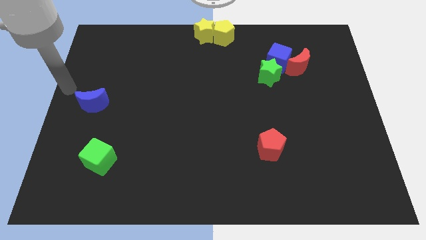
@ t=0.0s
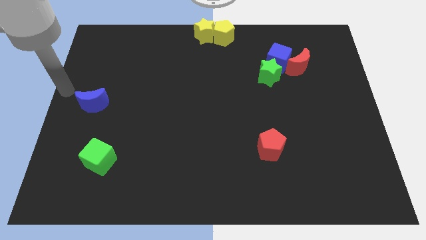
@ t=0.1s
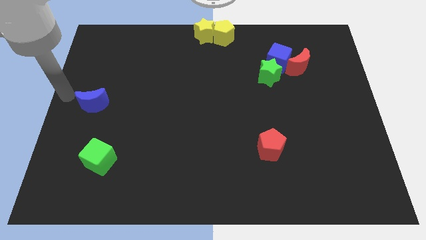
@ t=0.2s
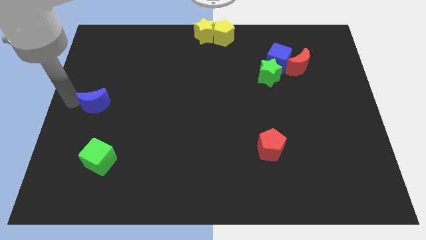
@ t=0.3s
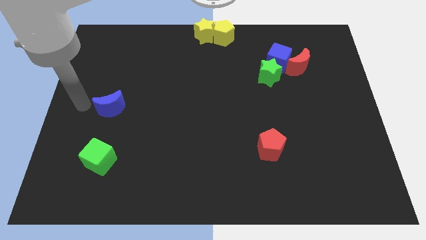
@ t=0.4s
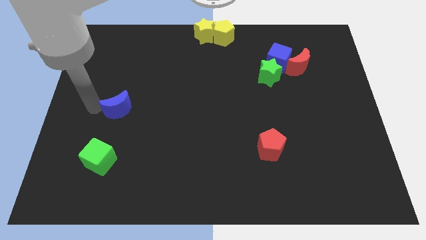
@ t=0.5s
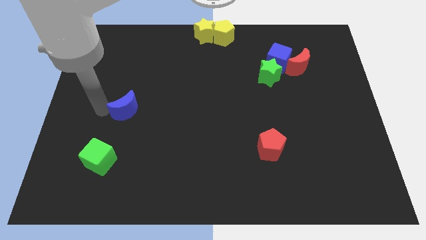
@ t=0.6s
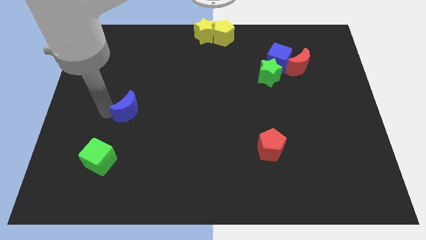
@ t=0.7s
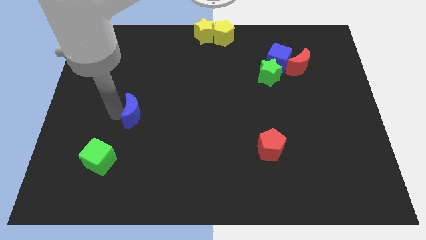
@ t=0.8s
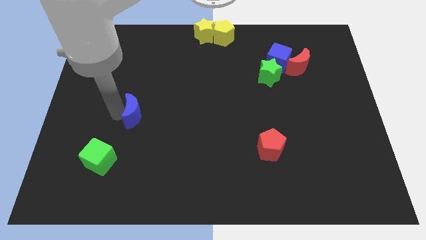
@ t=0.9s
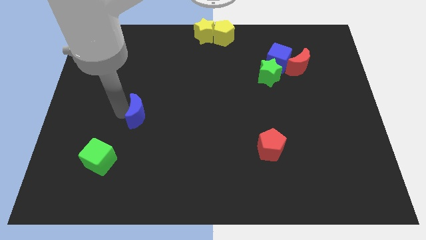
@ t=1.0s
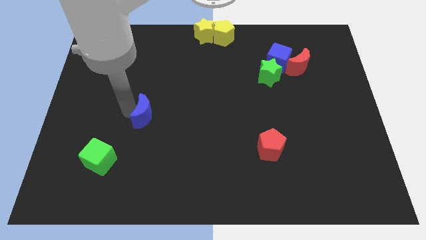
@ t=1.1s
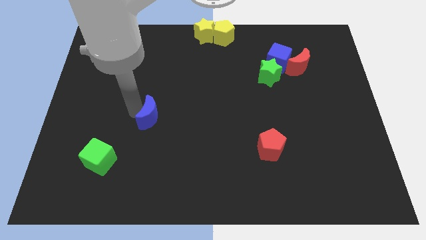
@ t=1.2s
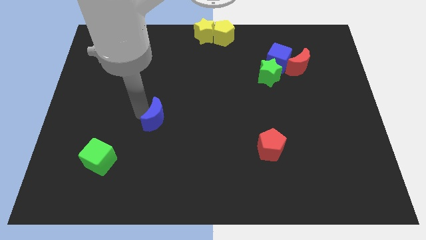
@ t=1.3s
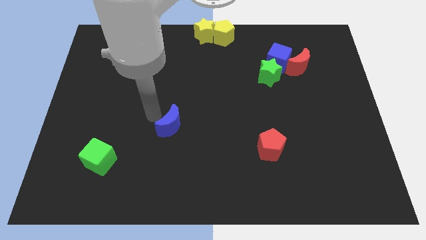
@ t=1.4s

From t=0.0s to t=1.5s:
push the blue moon diagonally top right to the green cube

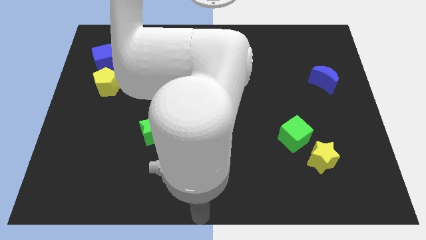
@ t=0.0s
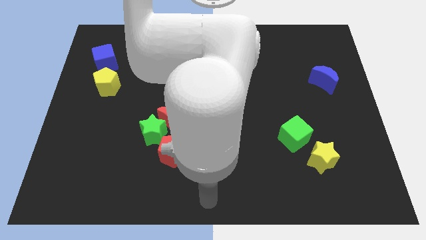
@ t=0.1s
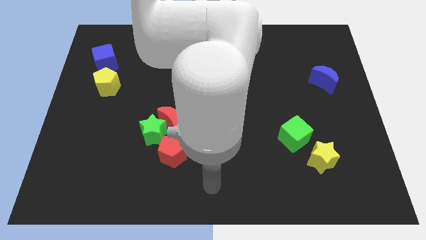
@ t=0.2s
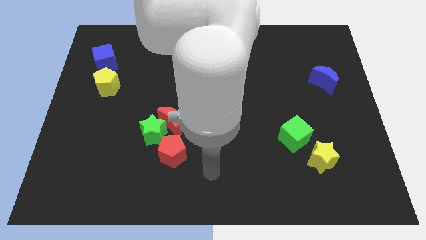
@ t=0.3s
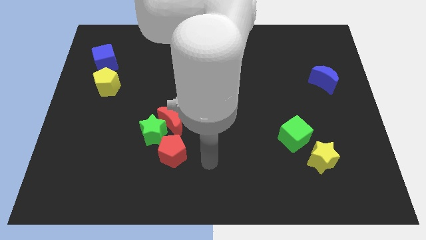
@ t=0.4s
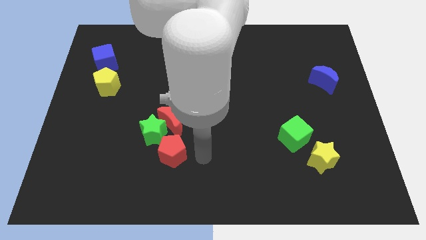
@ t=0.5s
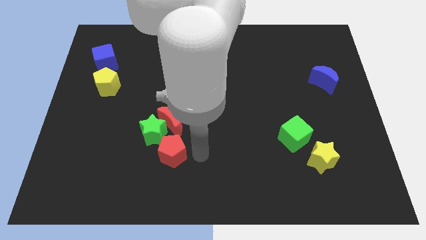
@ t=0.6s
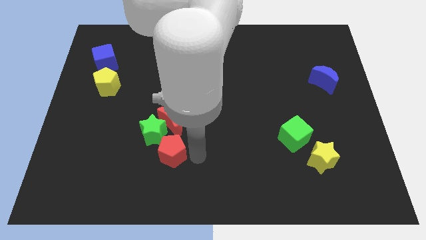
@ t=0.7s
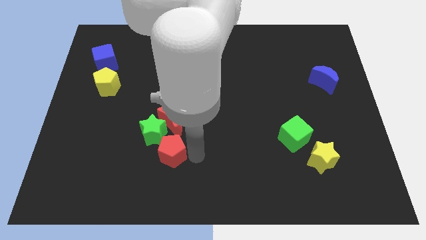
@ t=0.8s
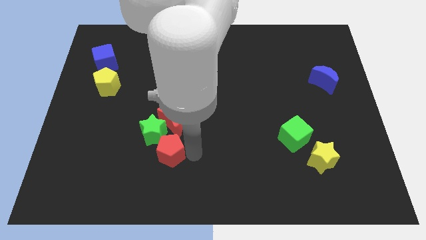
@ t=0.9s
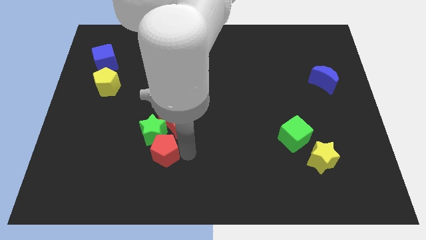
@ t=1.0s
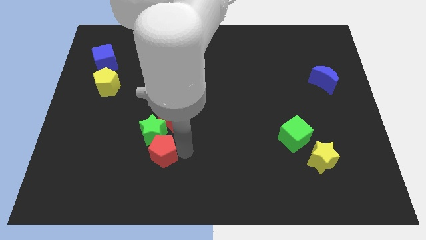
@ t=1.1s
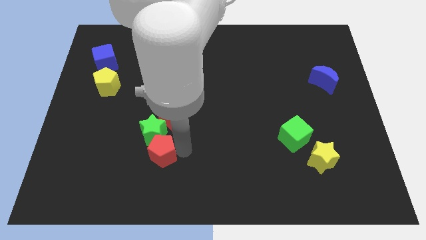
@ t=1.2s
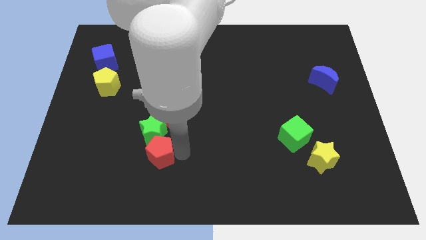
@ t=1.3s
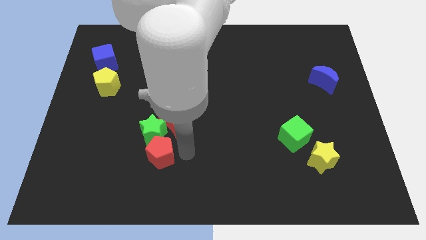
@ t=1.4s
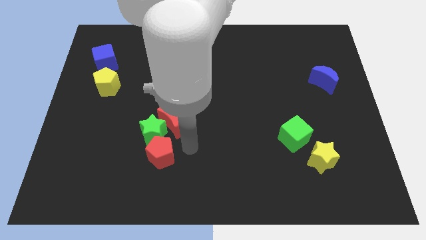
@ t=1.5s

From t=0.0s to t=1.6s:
move the red pentagon to the bottom of the green star

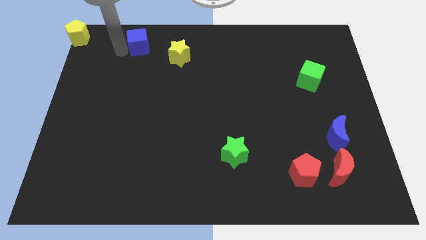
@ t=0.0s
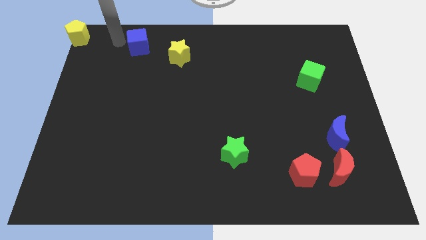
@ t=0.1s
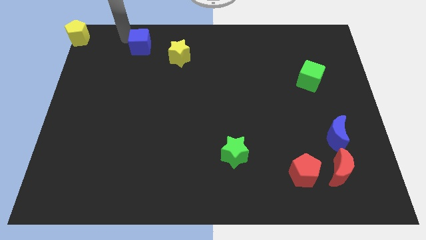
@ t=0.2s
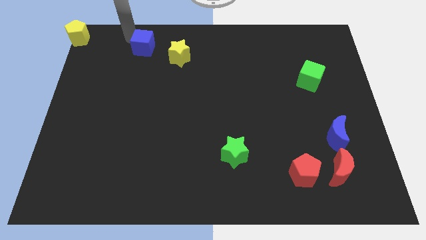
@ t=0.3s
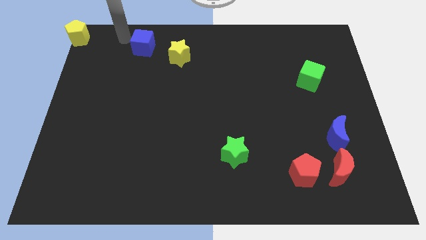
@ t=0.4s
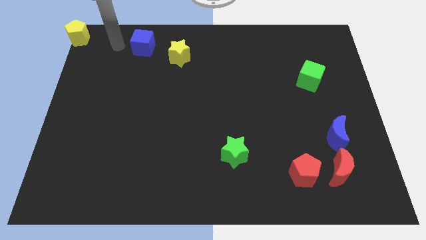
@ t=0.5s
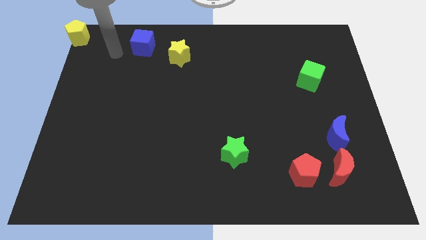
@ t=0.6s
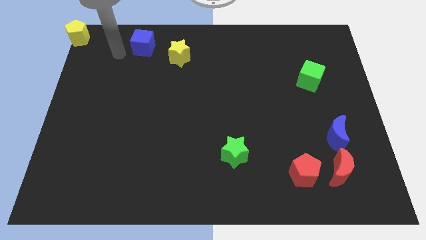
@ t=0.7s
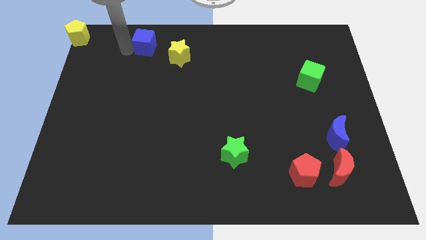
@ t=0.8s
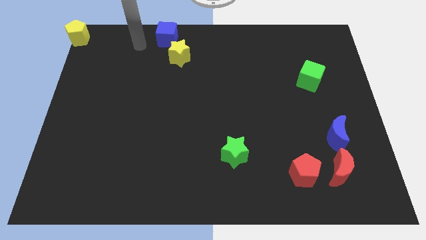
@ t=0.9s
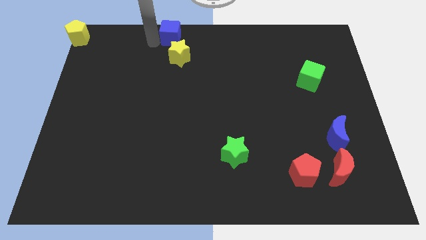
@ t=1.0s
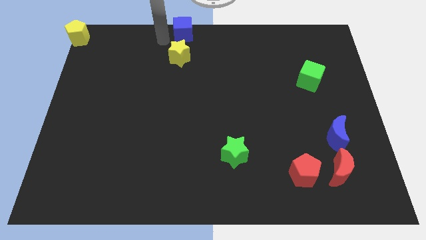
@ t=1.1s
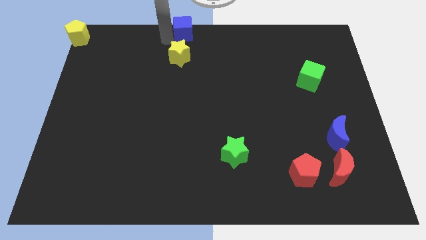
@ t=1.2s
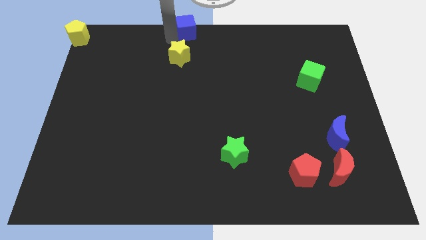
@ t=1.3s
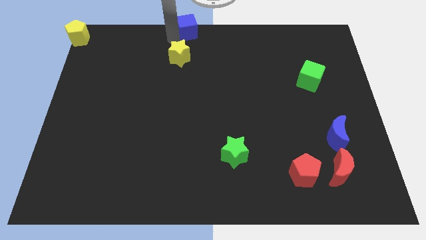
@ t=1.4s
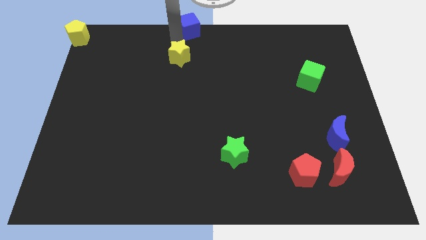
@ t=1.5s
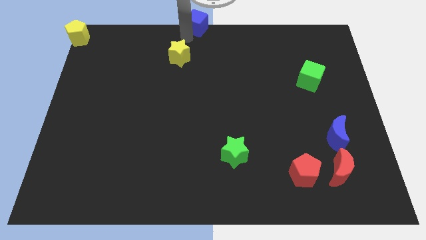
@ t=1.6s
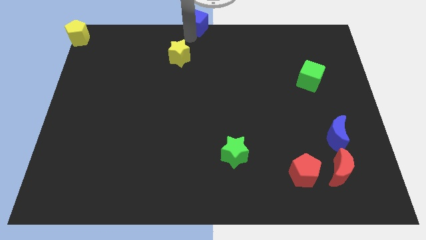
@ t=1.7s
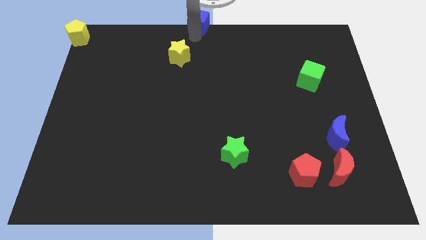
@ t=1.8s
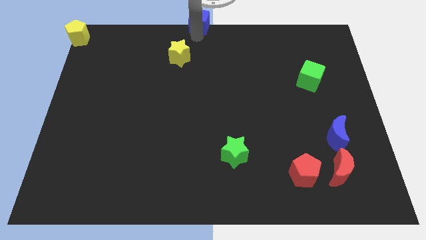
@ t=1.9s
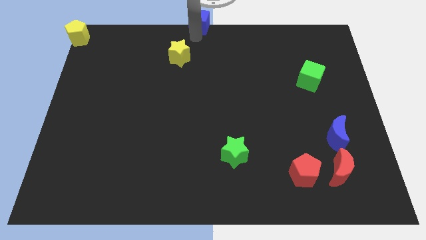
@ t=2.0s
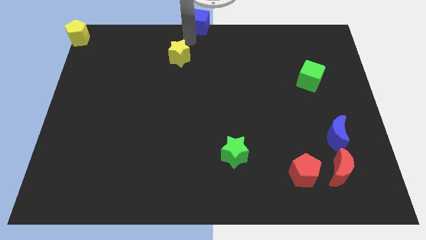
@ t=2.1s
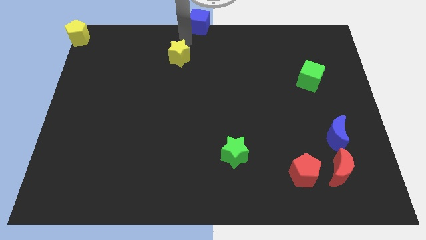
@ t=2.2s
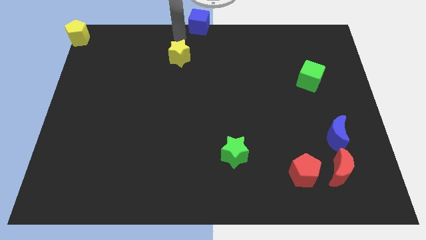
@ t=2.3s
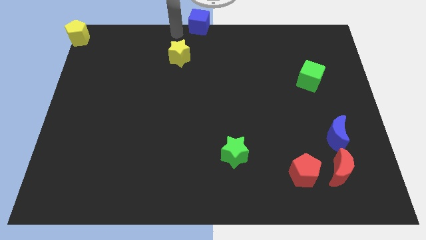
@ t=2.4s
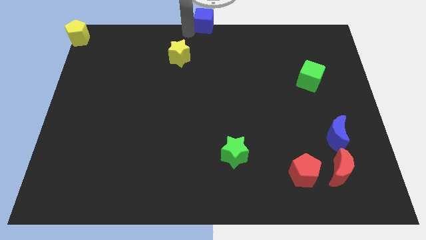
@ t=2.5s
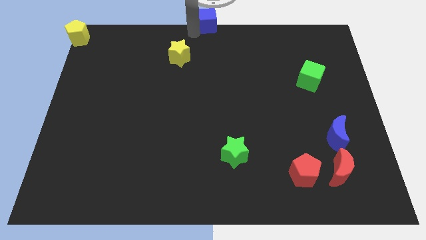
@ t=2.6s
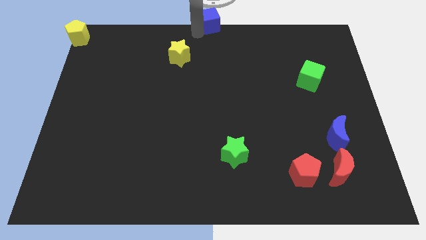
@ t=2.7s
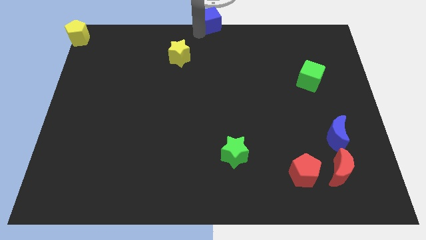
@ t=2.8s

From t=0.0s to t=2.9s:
place blue cube towards top center of the board

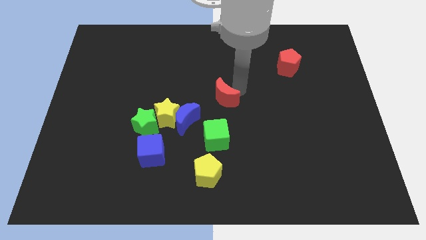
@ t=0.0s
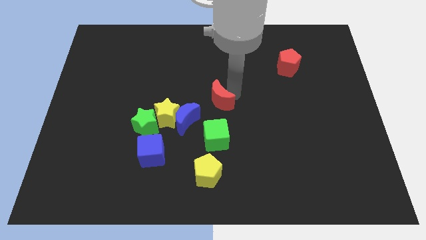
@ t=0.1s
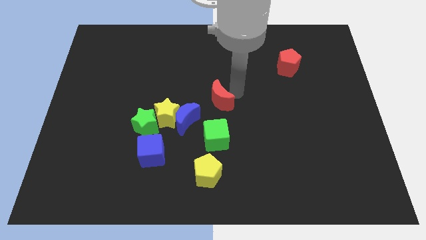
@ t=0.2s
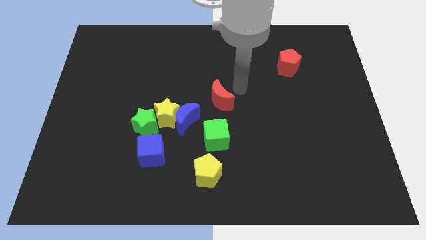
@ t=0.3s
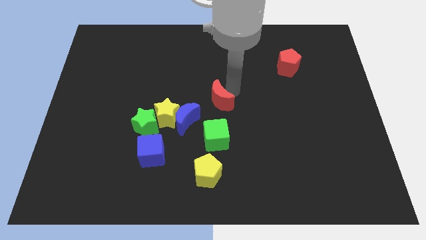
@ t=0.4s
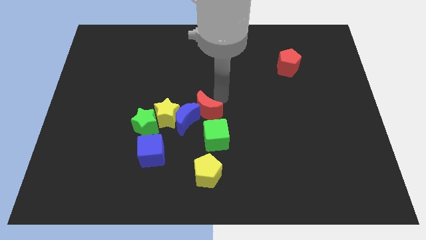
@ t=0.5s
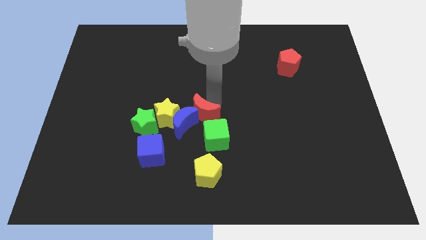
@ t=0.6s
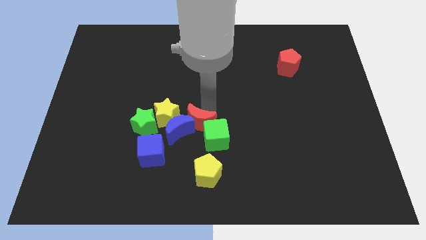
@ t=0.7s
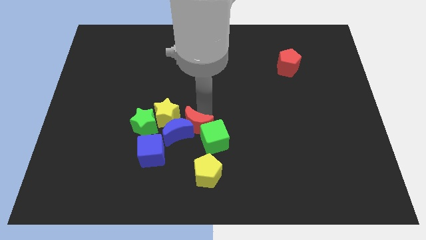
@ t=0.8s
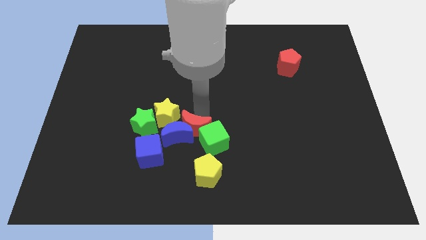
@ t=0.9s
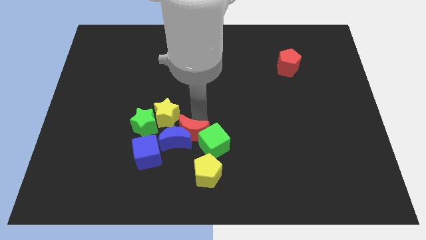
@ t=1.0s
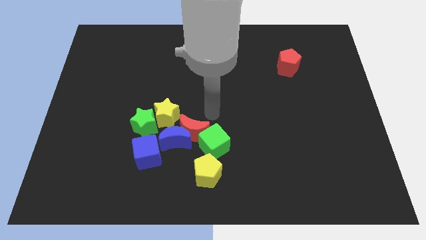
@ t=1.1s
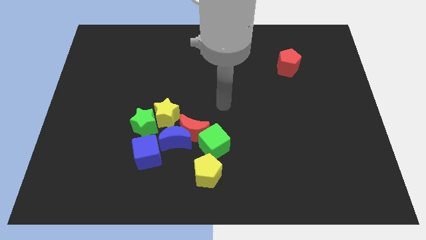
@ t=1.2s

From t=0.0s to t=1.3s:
push the red moon into the blue moon

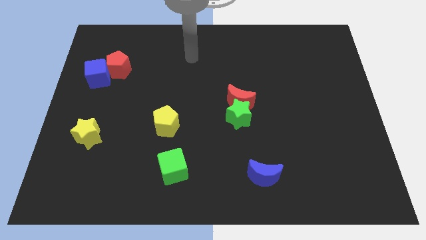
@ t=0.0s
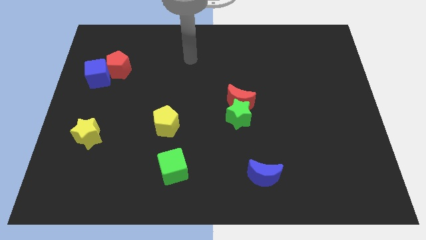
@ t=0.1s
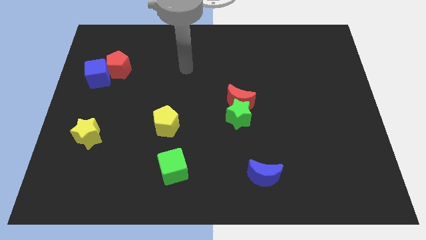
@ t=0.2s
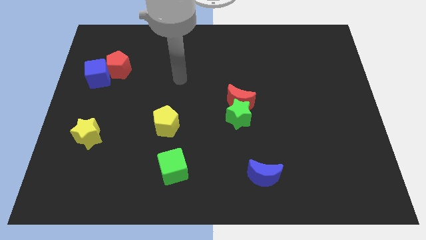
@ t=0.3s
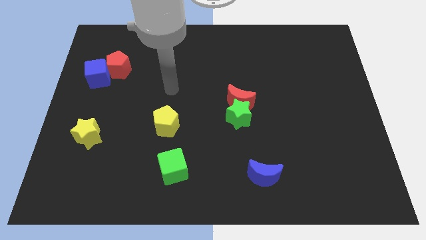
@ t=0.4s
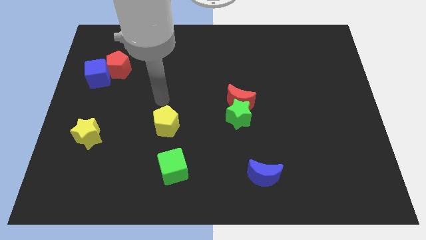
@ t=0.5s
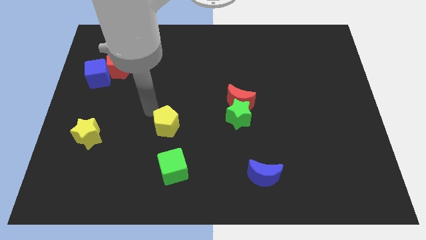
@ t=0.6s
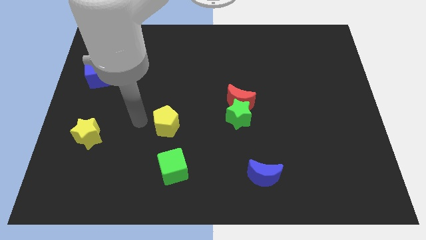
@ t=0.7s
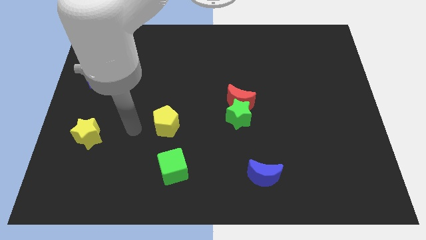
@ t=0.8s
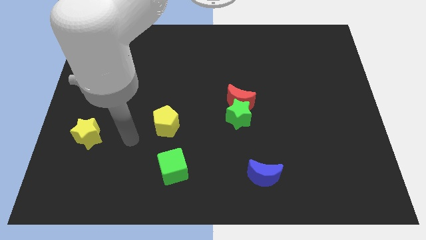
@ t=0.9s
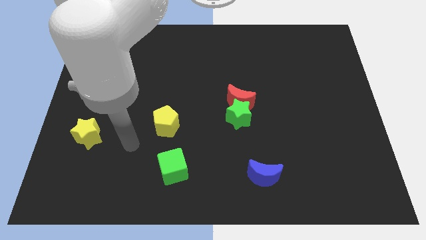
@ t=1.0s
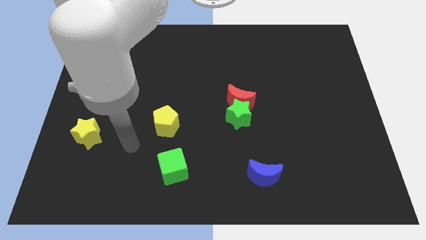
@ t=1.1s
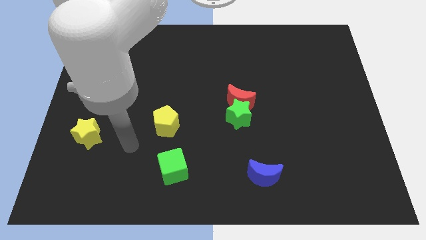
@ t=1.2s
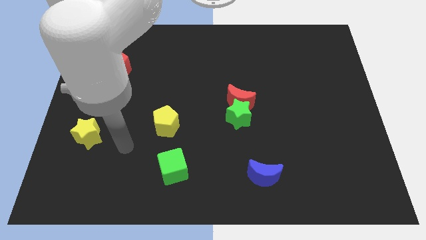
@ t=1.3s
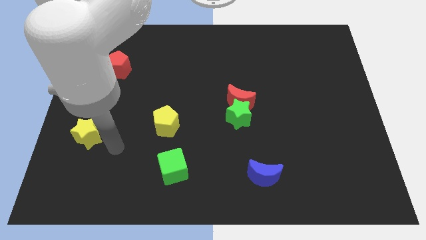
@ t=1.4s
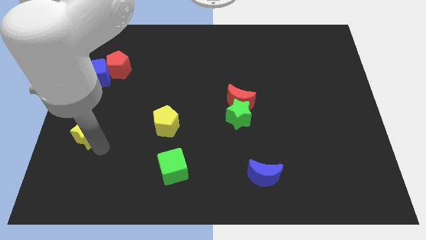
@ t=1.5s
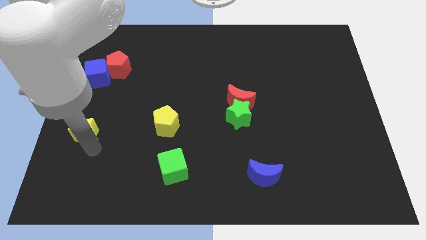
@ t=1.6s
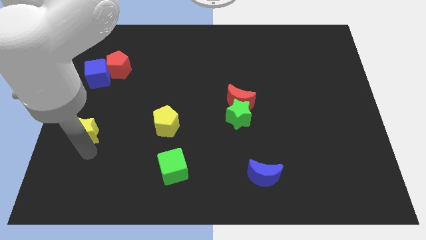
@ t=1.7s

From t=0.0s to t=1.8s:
tap at the bottom side of the yellow star

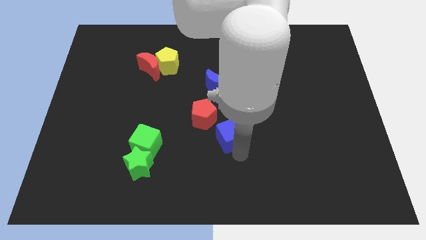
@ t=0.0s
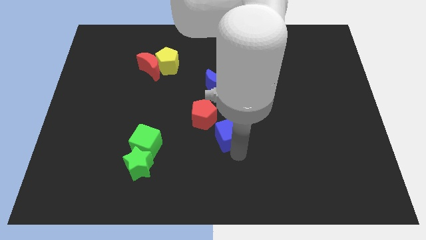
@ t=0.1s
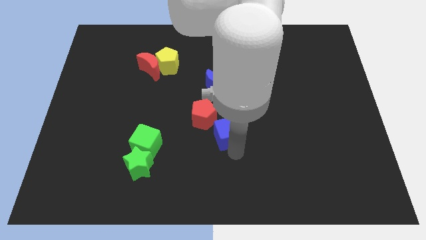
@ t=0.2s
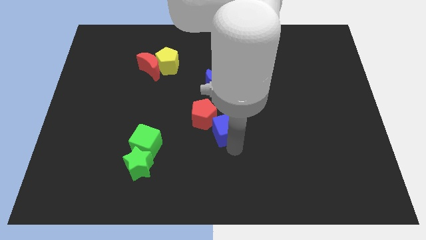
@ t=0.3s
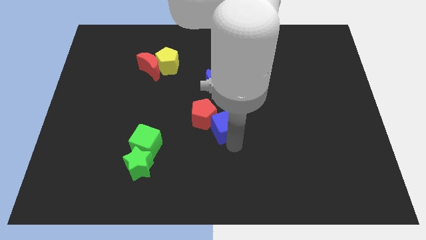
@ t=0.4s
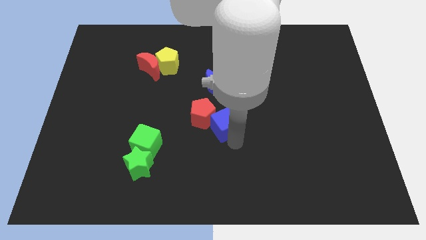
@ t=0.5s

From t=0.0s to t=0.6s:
push the blue cube into the red pentagon
